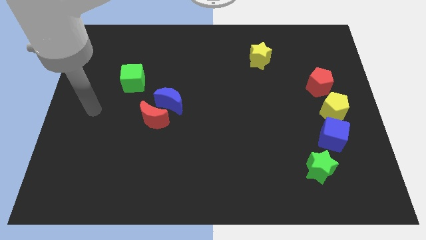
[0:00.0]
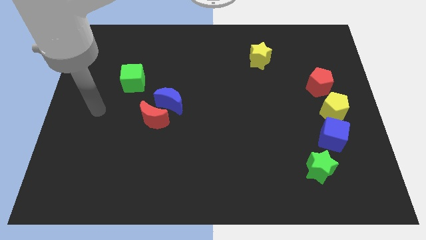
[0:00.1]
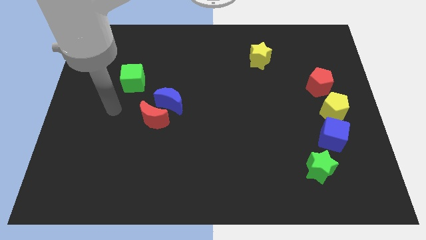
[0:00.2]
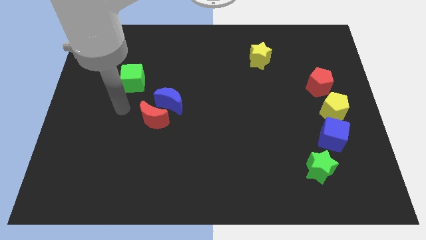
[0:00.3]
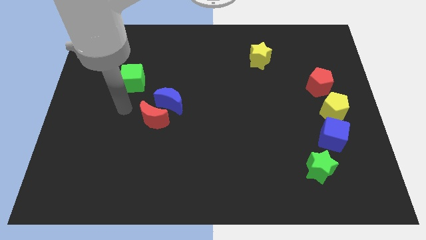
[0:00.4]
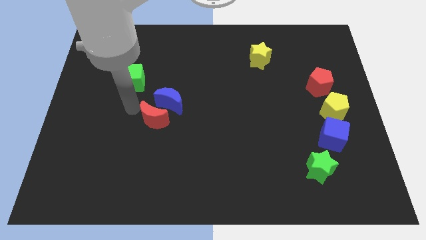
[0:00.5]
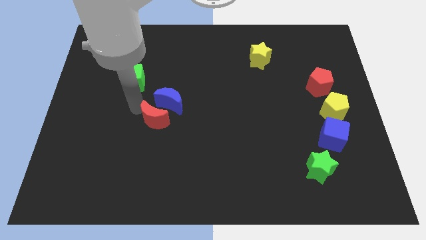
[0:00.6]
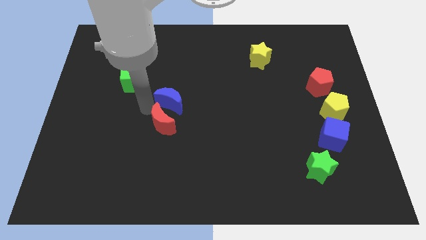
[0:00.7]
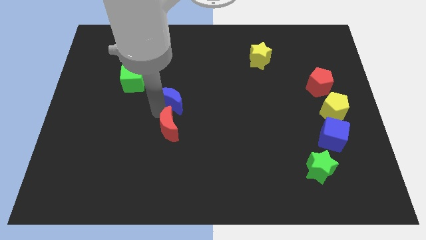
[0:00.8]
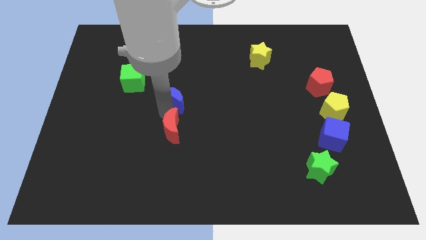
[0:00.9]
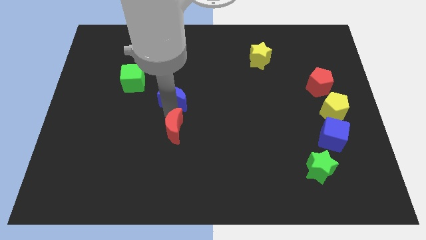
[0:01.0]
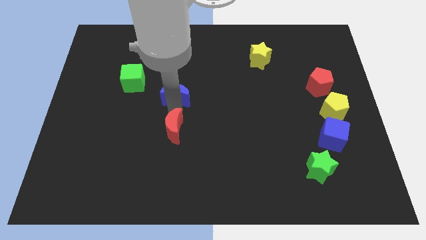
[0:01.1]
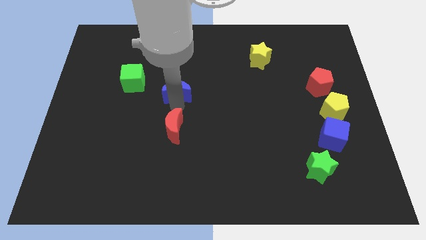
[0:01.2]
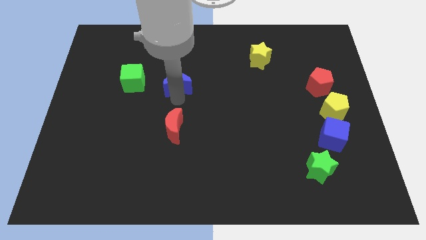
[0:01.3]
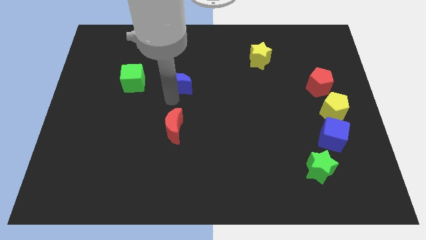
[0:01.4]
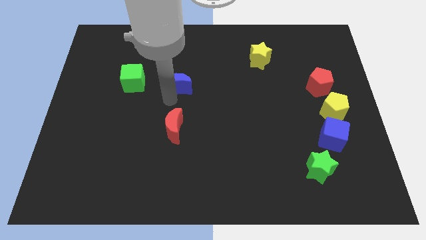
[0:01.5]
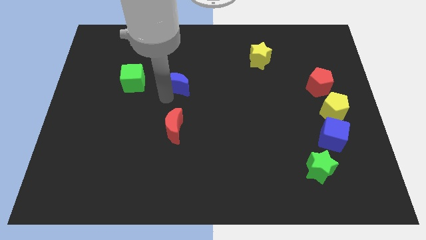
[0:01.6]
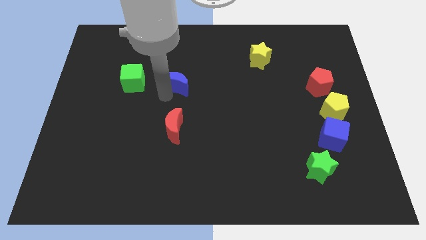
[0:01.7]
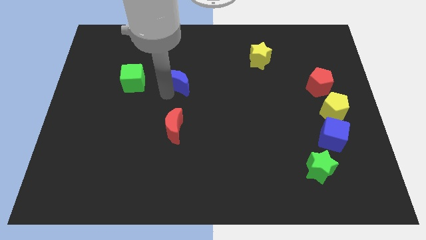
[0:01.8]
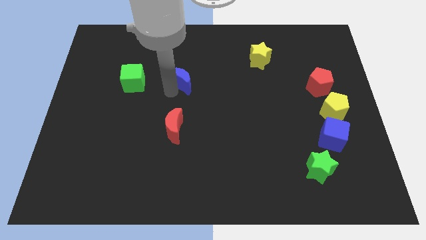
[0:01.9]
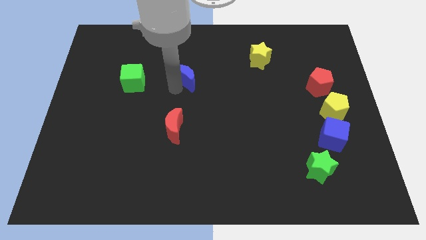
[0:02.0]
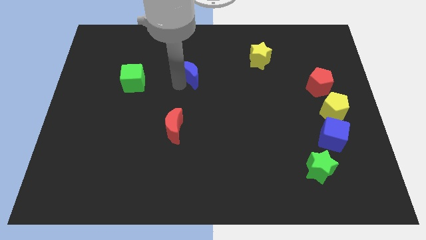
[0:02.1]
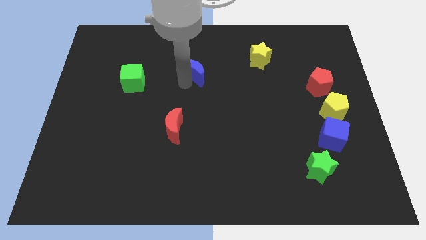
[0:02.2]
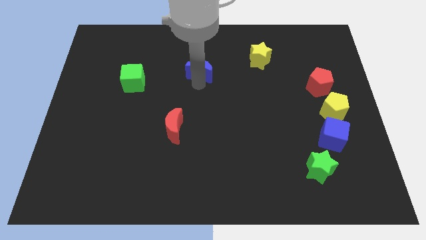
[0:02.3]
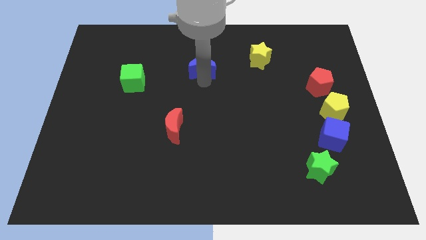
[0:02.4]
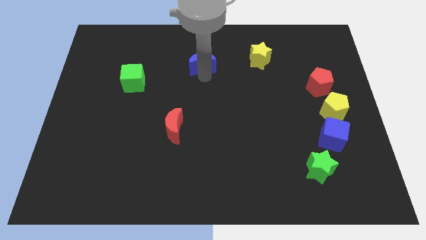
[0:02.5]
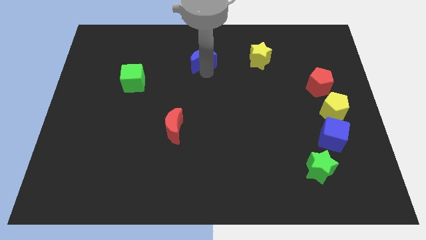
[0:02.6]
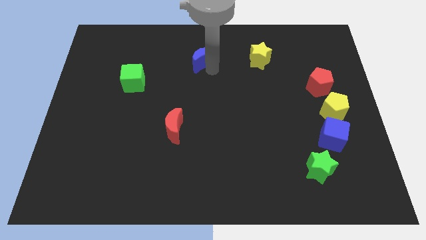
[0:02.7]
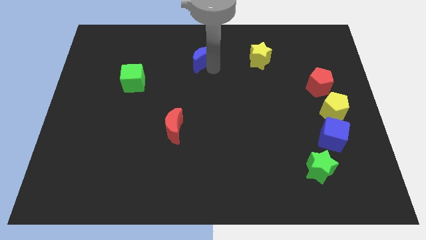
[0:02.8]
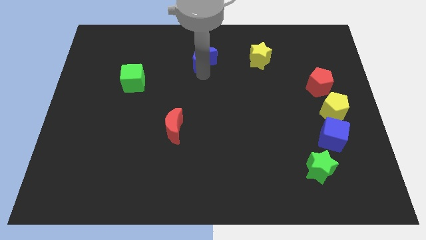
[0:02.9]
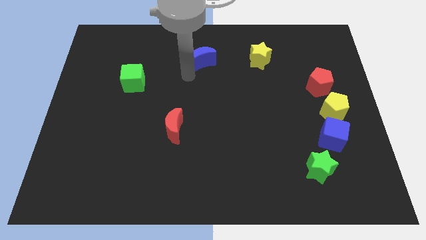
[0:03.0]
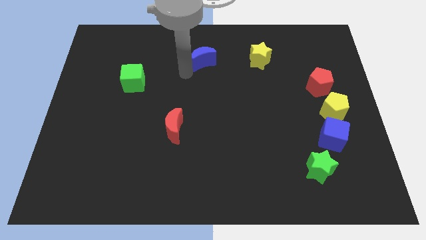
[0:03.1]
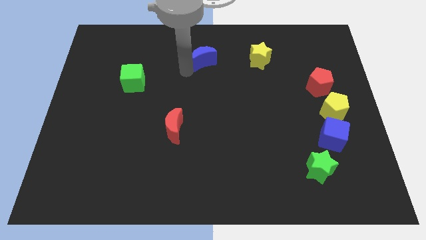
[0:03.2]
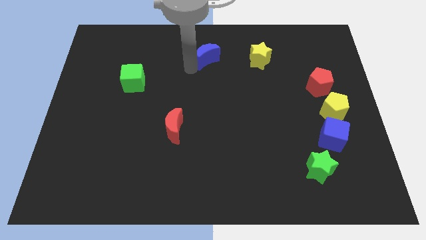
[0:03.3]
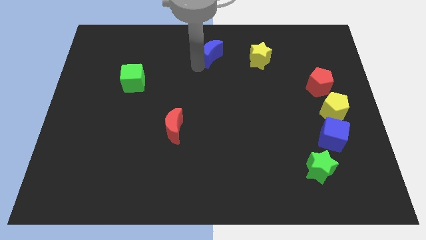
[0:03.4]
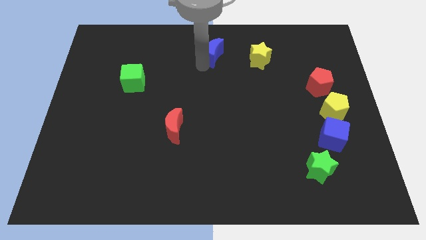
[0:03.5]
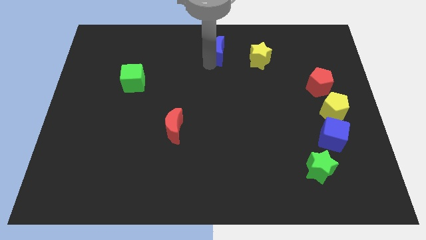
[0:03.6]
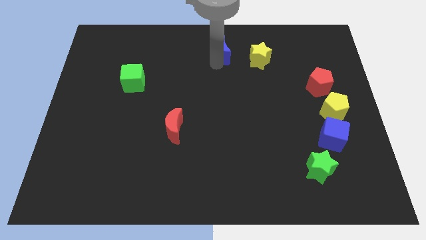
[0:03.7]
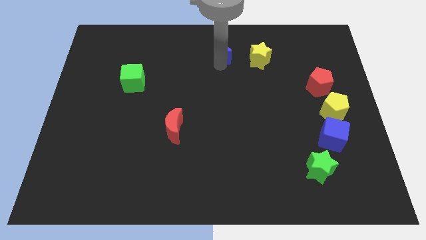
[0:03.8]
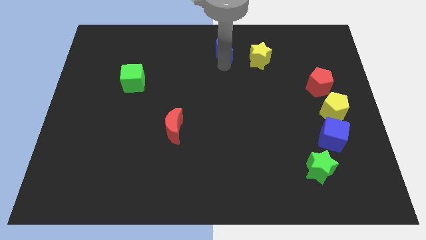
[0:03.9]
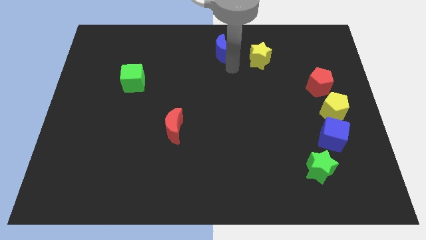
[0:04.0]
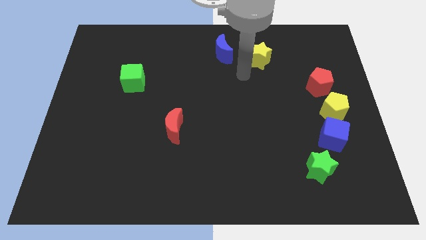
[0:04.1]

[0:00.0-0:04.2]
place the blue crescent diagonally top right to the red crescent

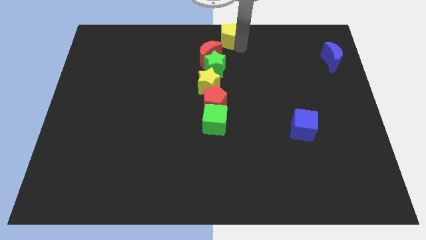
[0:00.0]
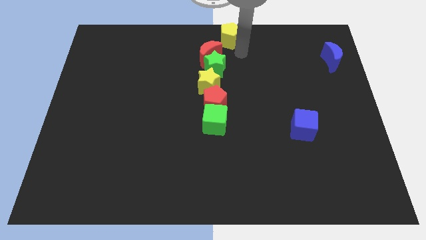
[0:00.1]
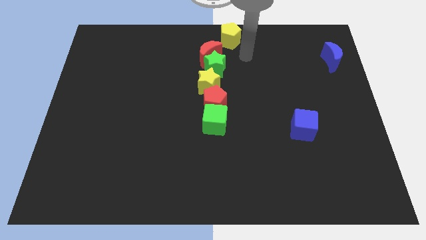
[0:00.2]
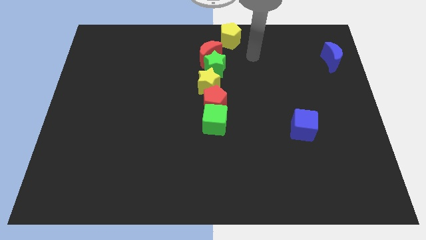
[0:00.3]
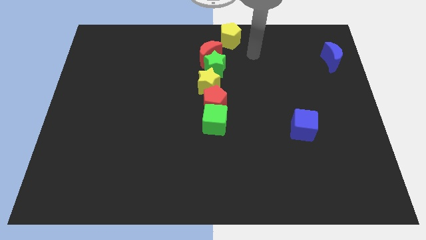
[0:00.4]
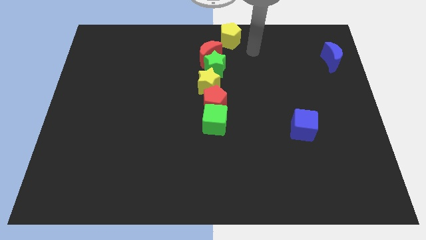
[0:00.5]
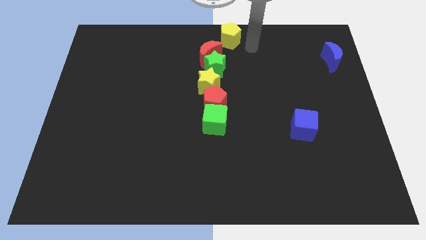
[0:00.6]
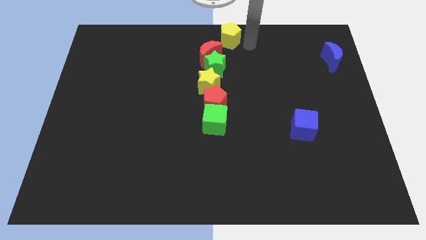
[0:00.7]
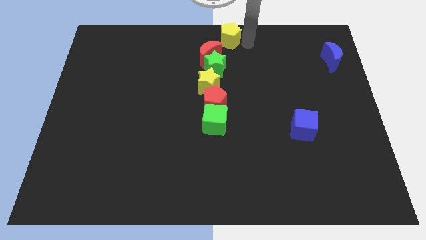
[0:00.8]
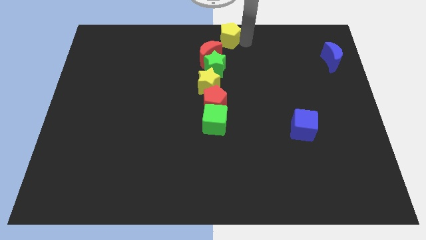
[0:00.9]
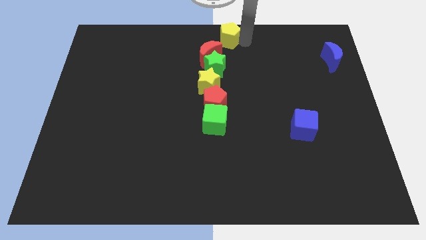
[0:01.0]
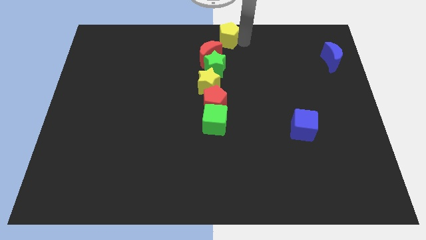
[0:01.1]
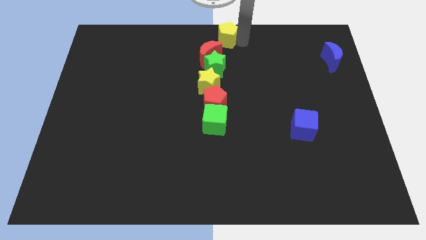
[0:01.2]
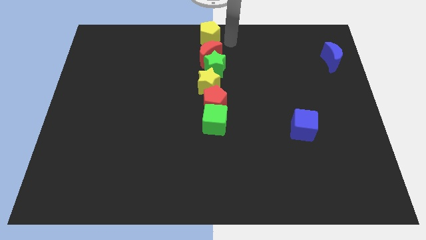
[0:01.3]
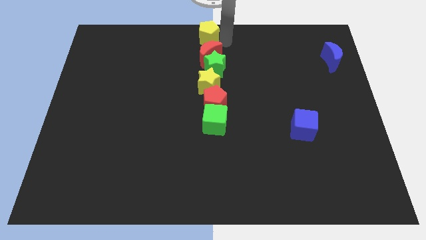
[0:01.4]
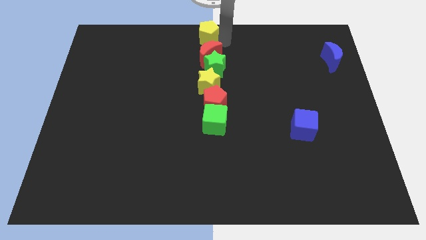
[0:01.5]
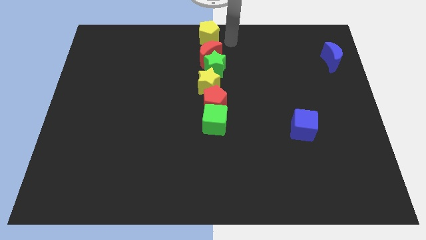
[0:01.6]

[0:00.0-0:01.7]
place yellow pentagon to the top of red crescent

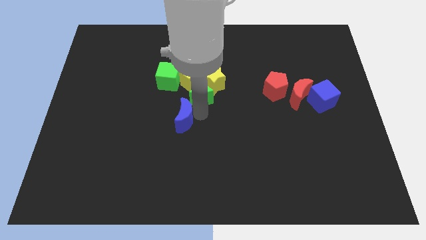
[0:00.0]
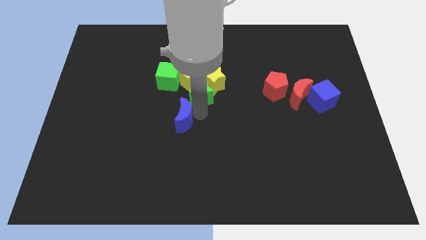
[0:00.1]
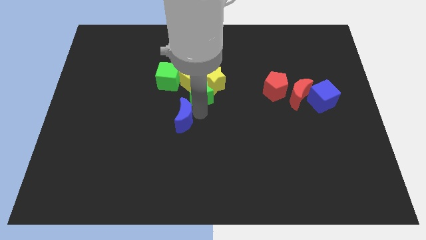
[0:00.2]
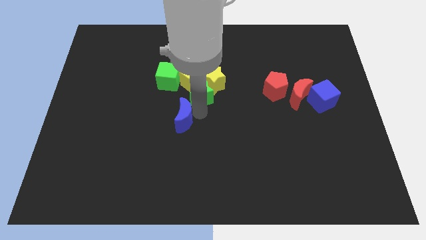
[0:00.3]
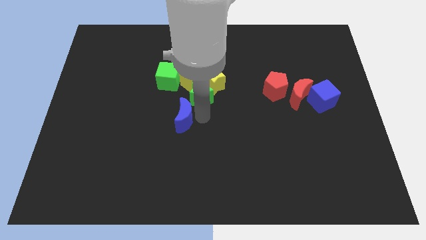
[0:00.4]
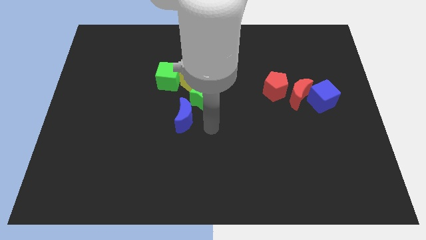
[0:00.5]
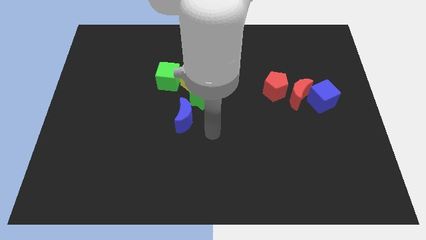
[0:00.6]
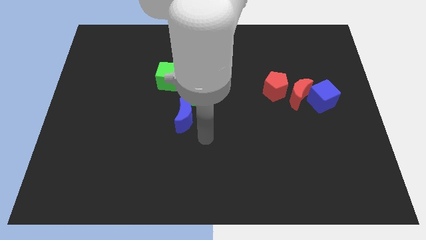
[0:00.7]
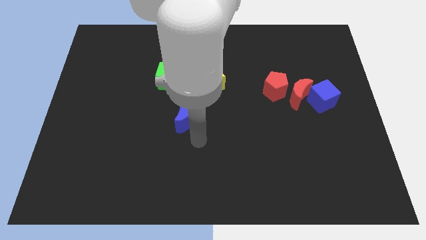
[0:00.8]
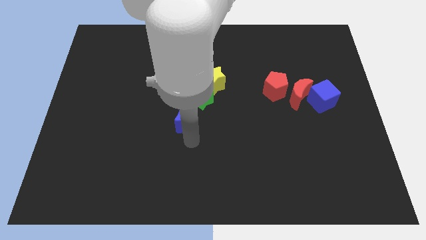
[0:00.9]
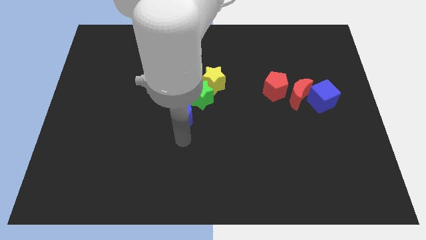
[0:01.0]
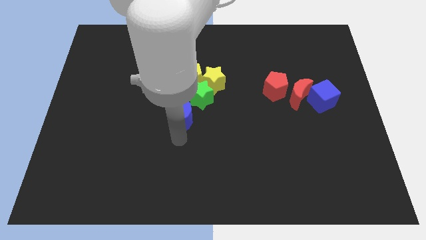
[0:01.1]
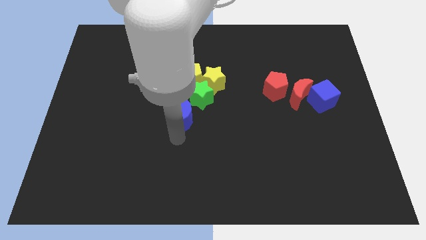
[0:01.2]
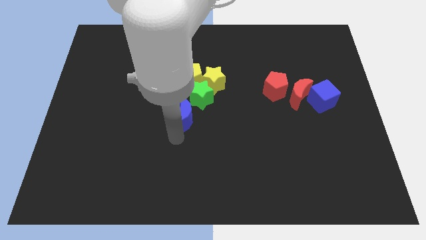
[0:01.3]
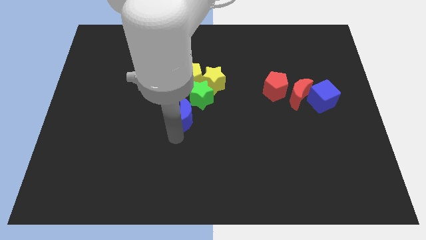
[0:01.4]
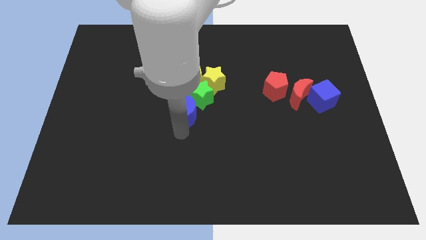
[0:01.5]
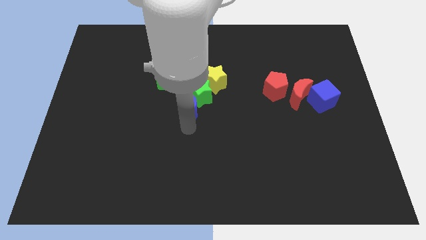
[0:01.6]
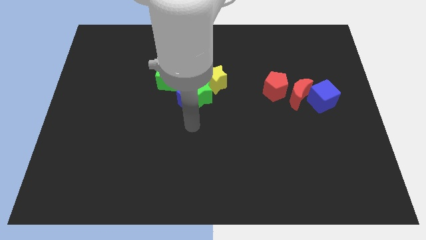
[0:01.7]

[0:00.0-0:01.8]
make the blue crescent to touch the green star

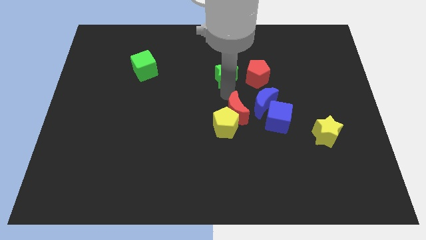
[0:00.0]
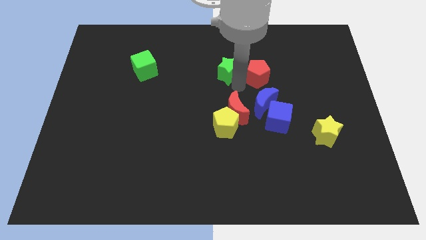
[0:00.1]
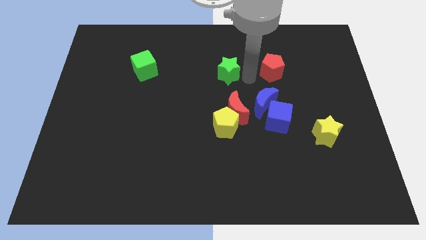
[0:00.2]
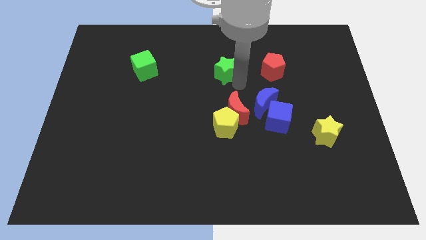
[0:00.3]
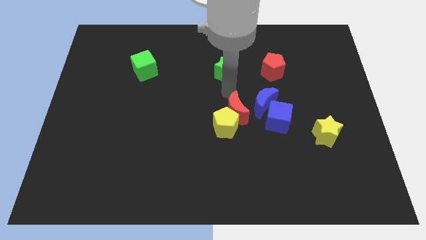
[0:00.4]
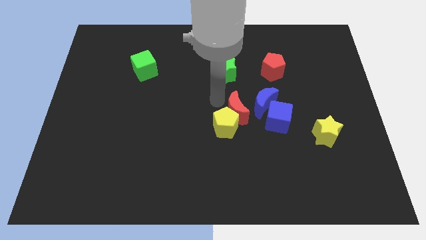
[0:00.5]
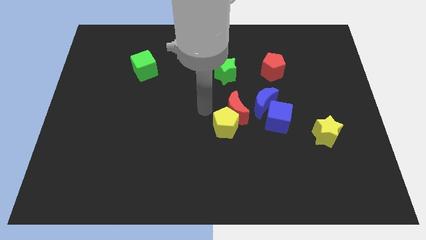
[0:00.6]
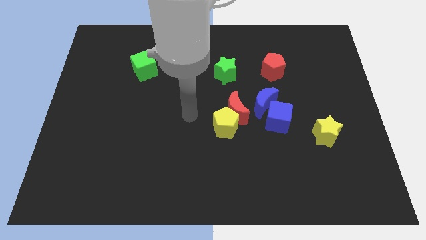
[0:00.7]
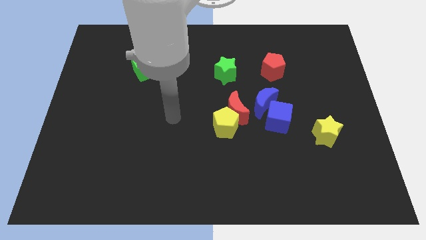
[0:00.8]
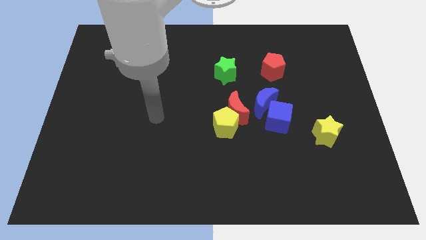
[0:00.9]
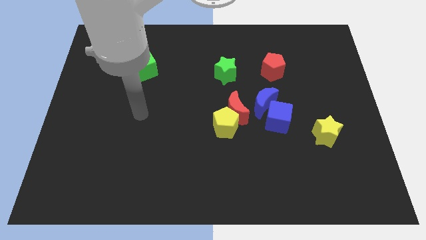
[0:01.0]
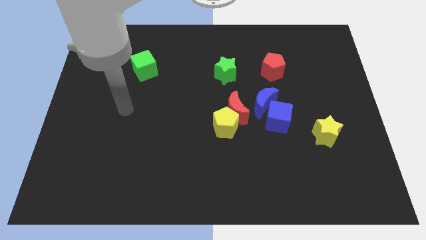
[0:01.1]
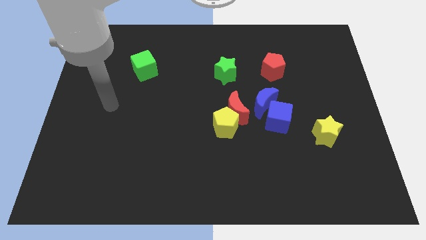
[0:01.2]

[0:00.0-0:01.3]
separate the green star and the red pentagon
